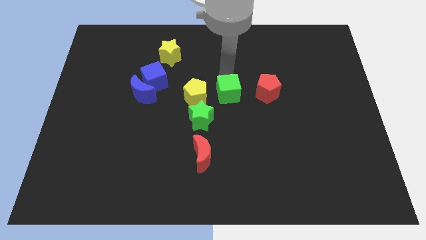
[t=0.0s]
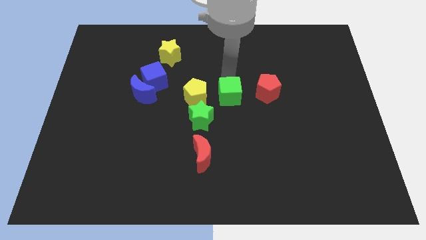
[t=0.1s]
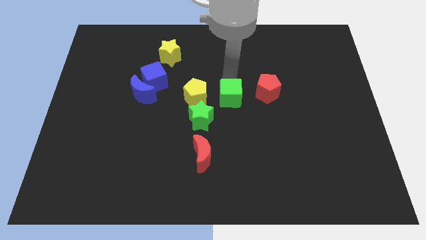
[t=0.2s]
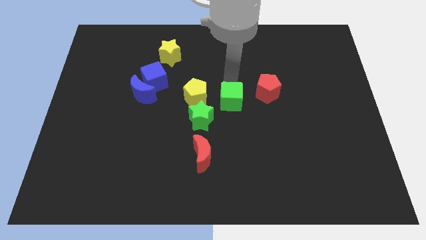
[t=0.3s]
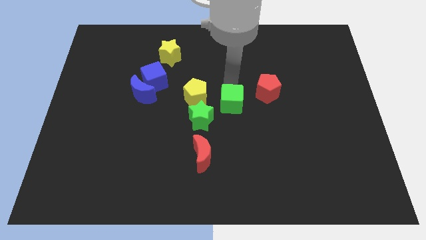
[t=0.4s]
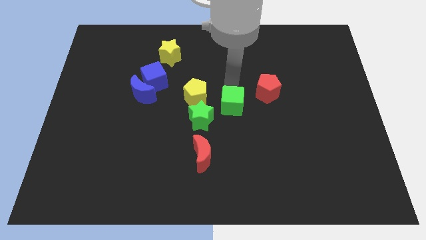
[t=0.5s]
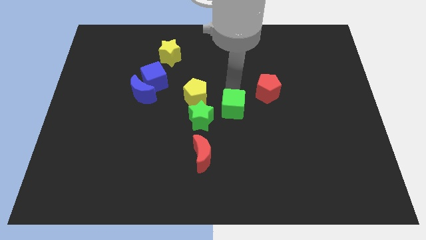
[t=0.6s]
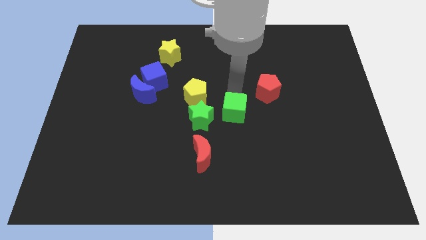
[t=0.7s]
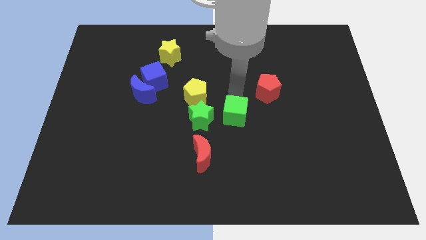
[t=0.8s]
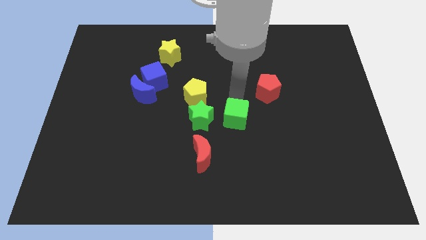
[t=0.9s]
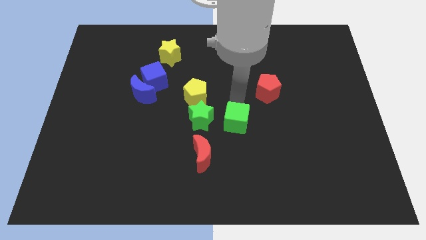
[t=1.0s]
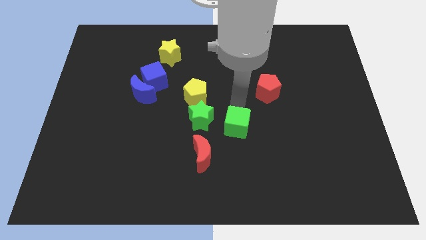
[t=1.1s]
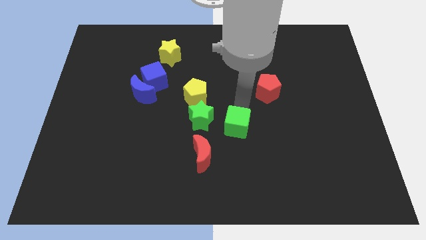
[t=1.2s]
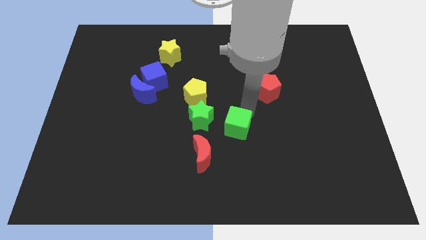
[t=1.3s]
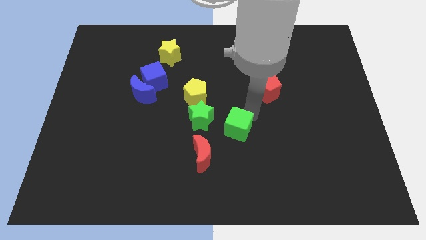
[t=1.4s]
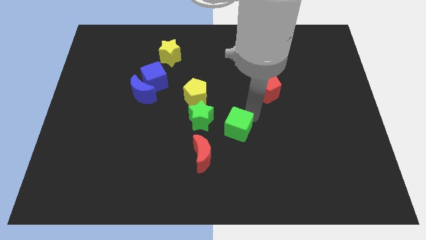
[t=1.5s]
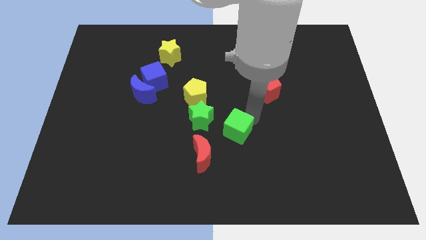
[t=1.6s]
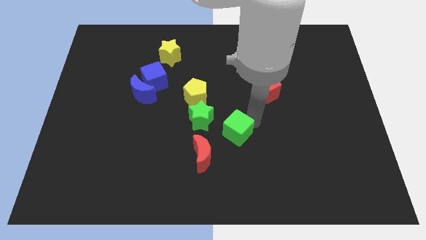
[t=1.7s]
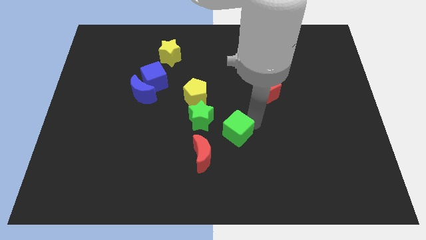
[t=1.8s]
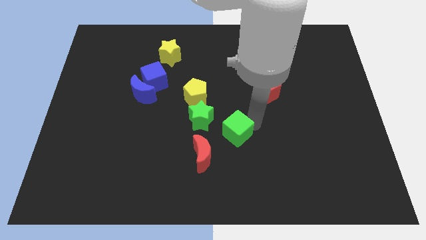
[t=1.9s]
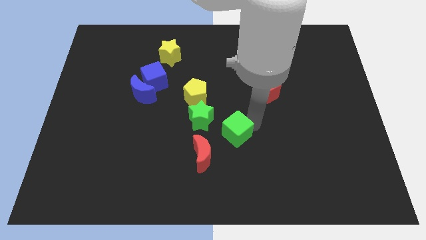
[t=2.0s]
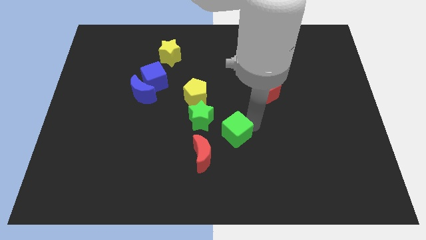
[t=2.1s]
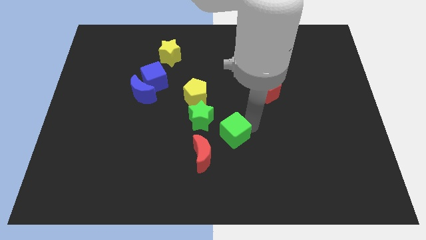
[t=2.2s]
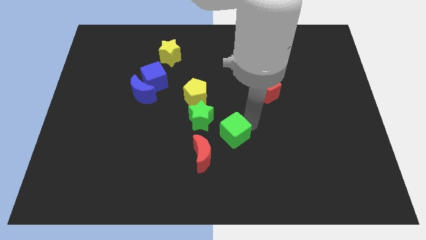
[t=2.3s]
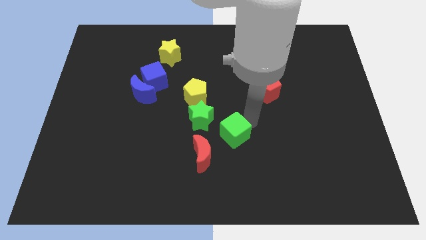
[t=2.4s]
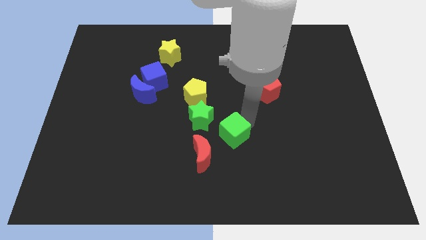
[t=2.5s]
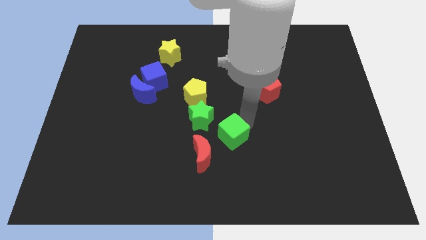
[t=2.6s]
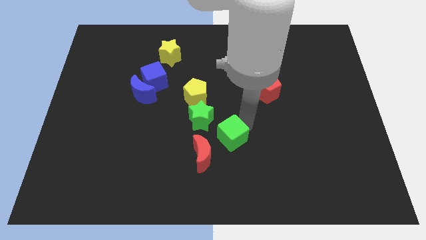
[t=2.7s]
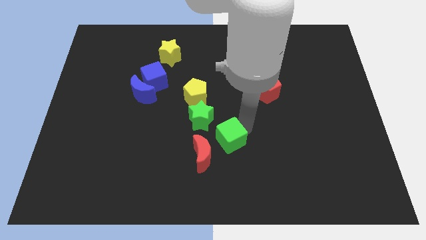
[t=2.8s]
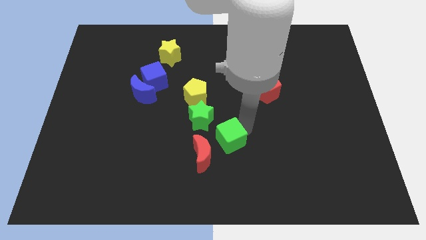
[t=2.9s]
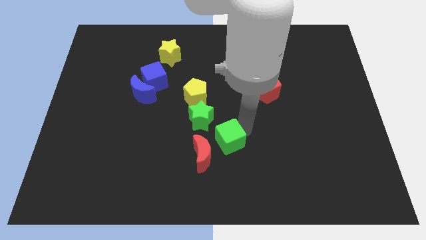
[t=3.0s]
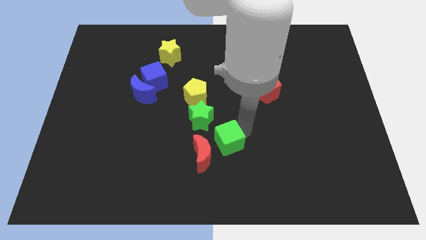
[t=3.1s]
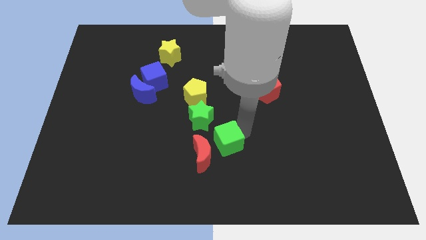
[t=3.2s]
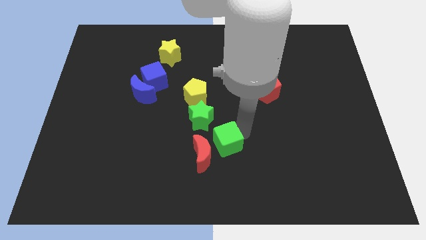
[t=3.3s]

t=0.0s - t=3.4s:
adjust the green cube at the bottom right of the green star

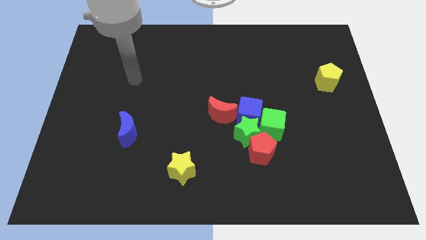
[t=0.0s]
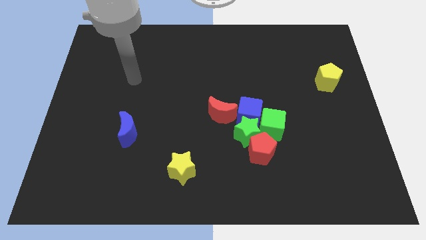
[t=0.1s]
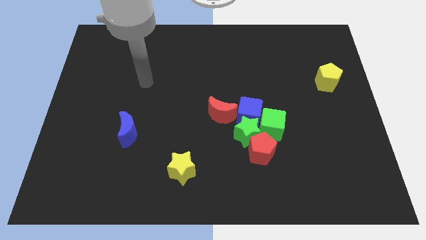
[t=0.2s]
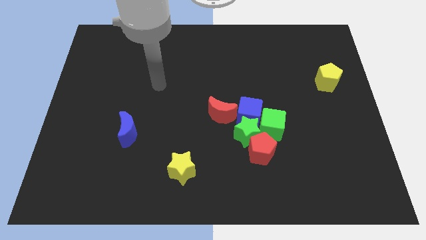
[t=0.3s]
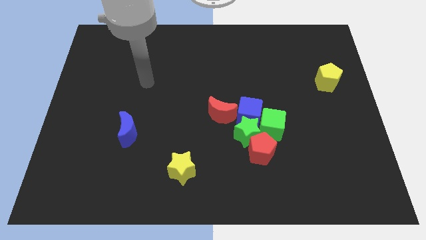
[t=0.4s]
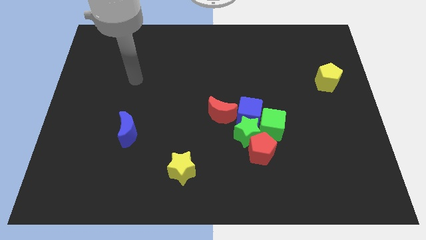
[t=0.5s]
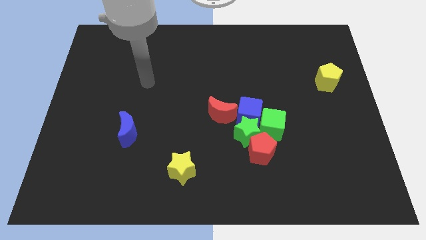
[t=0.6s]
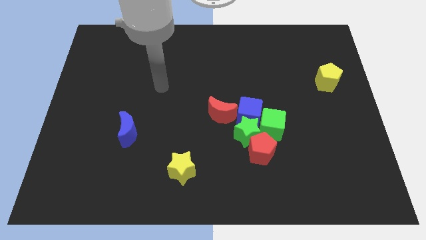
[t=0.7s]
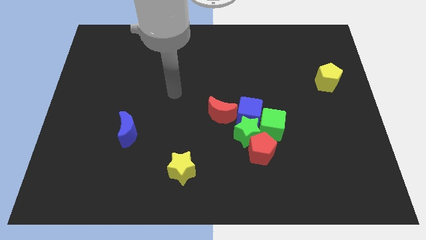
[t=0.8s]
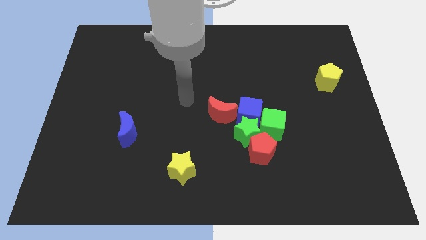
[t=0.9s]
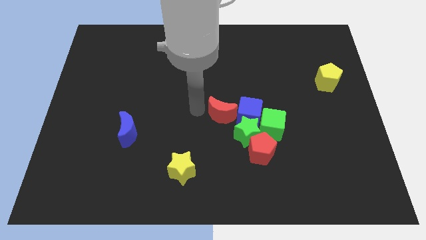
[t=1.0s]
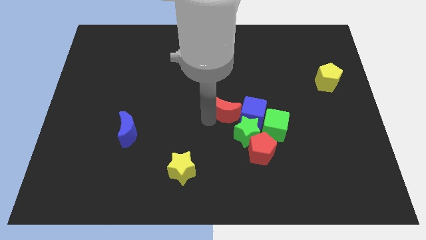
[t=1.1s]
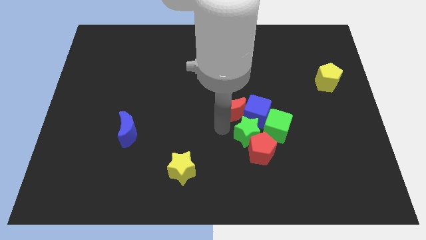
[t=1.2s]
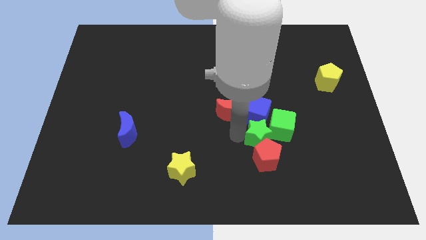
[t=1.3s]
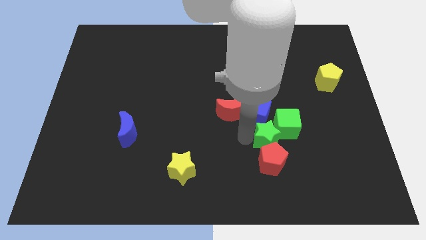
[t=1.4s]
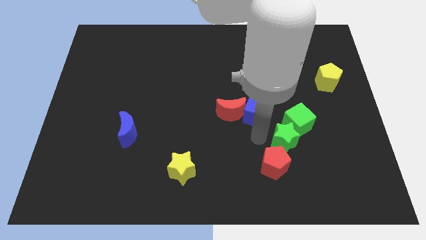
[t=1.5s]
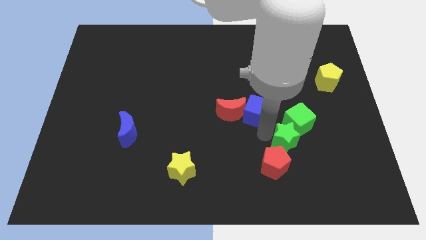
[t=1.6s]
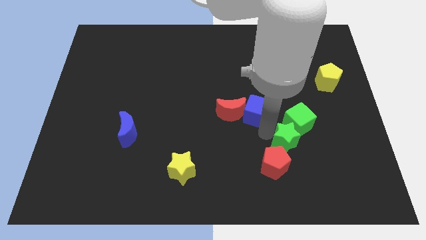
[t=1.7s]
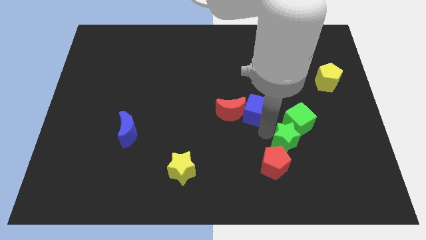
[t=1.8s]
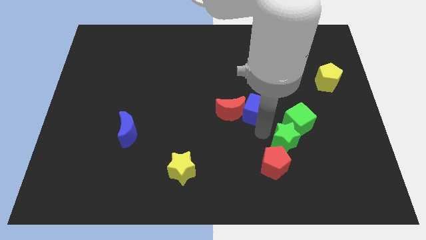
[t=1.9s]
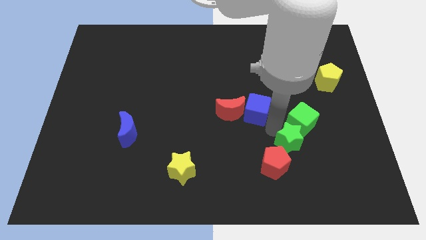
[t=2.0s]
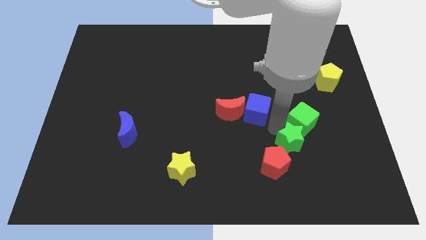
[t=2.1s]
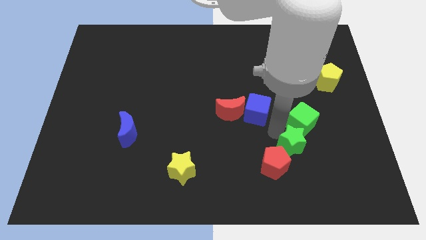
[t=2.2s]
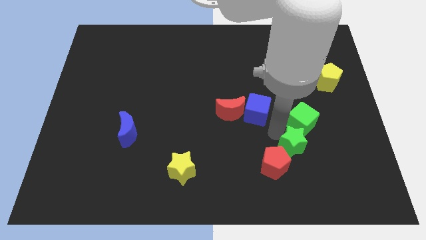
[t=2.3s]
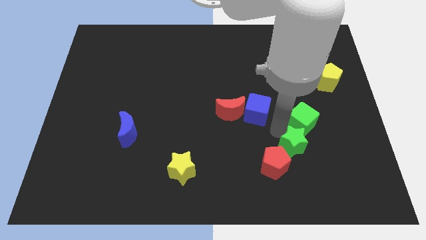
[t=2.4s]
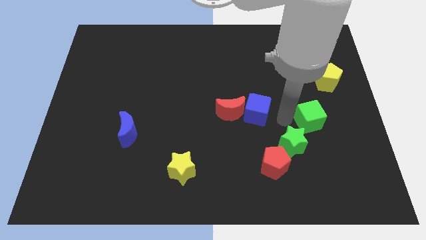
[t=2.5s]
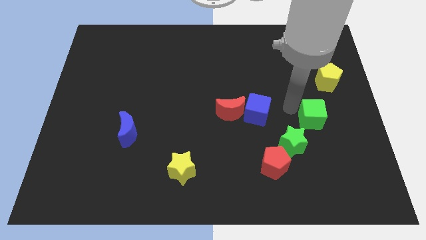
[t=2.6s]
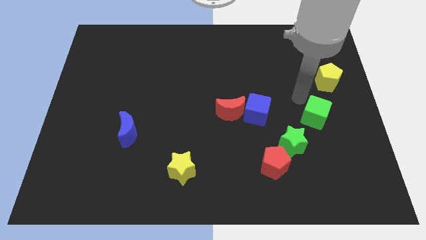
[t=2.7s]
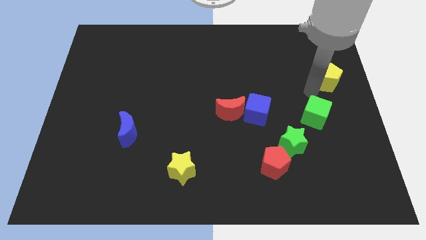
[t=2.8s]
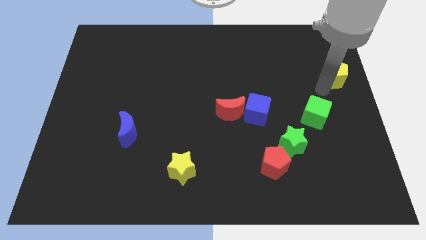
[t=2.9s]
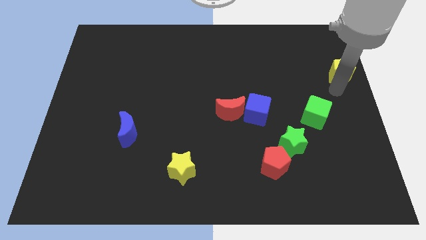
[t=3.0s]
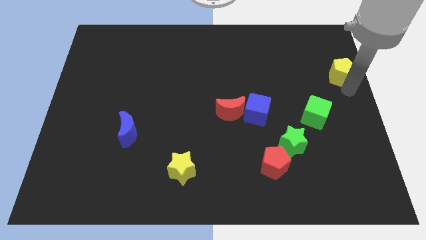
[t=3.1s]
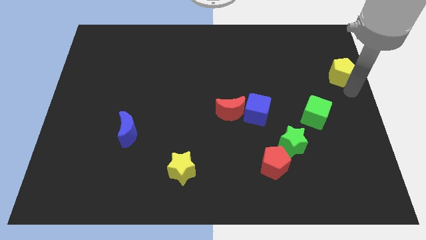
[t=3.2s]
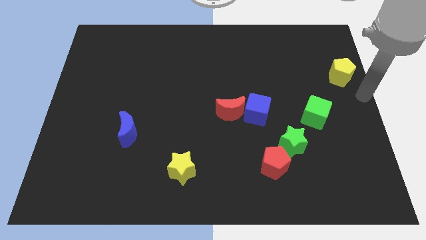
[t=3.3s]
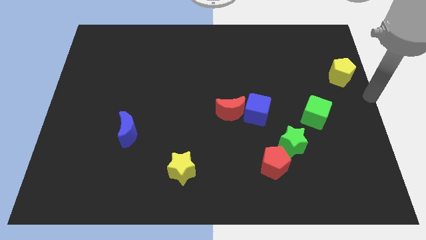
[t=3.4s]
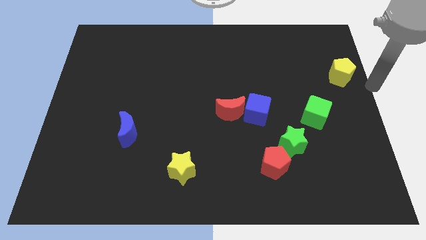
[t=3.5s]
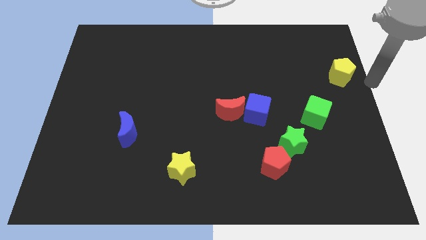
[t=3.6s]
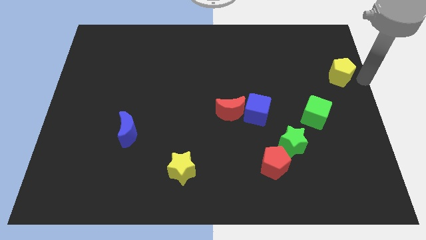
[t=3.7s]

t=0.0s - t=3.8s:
push green cube diagonally above green star

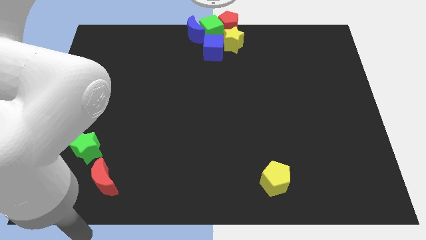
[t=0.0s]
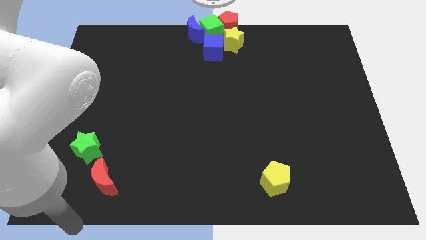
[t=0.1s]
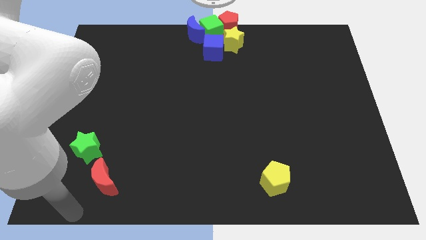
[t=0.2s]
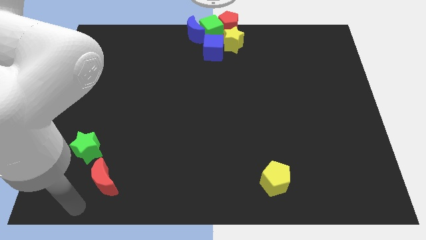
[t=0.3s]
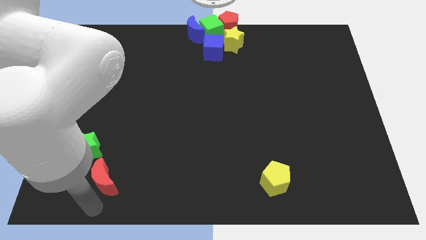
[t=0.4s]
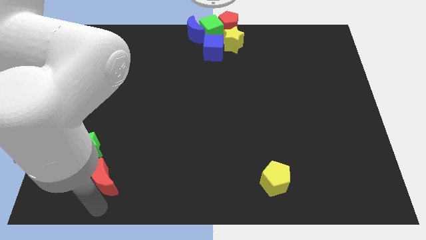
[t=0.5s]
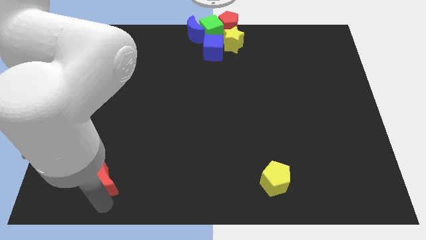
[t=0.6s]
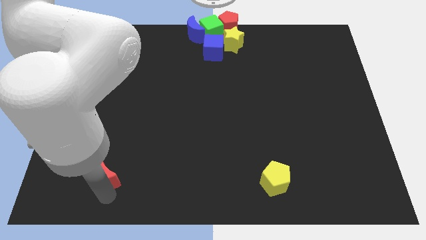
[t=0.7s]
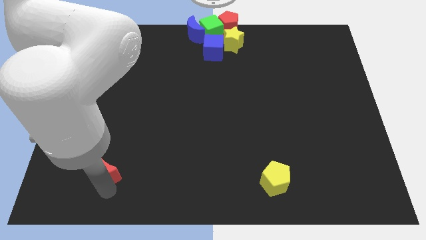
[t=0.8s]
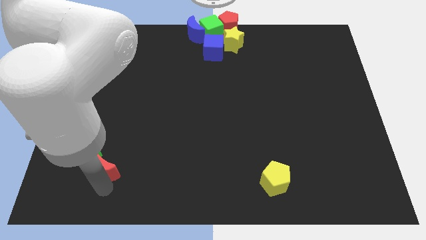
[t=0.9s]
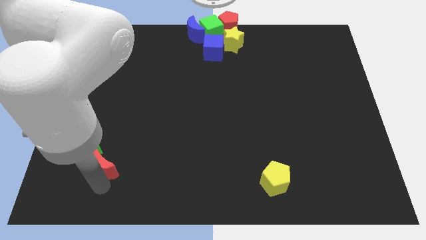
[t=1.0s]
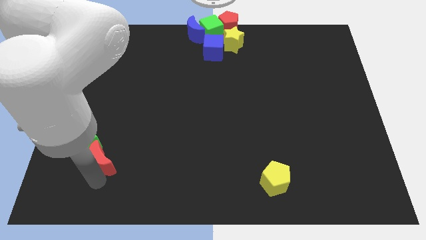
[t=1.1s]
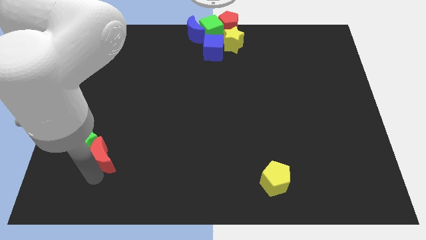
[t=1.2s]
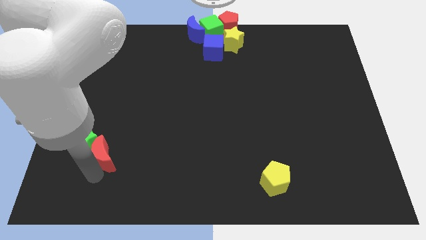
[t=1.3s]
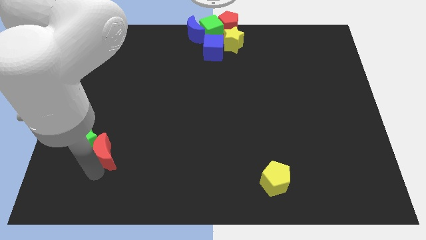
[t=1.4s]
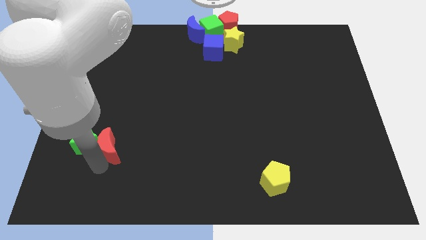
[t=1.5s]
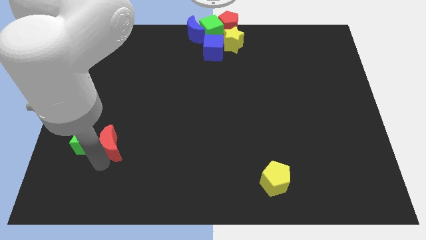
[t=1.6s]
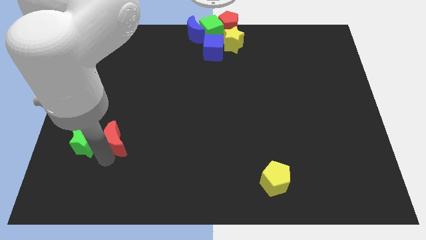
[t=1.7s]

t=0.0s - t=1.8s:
move the green star with the red moon

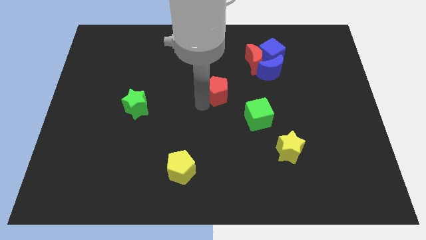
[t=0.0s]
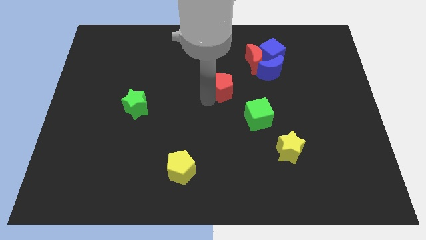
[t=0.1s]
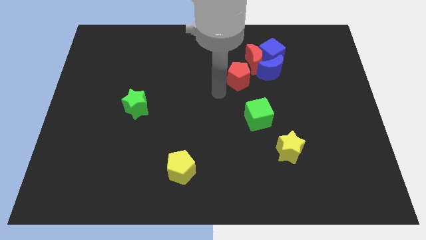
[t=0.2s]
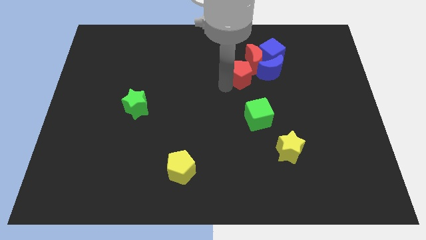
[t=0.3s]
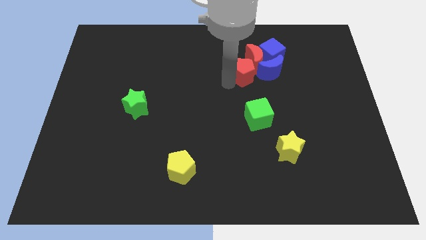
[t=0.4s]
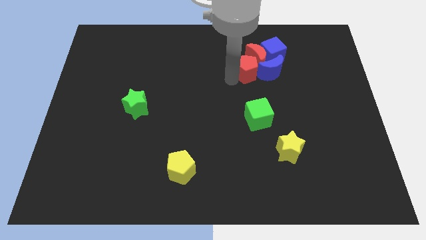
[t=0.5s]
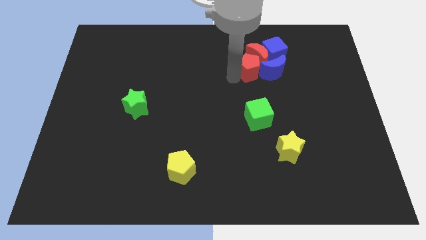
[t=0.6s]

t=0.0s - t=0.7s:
push the red pentagon to the left of the blue crescent
